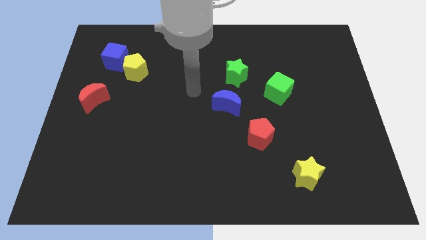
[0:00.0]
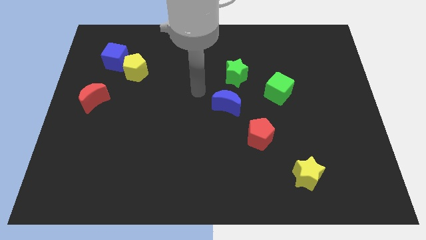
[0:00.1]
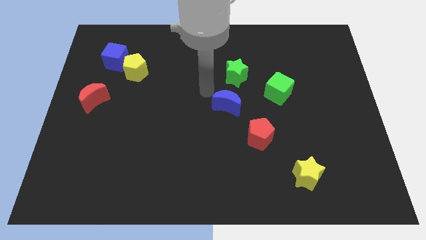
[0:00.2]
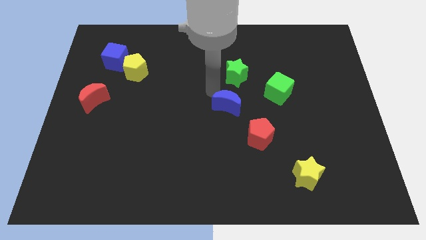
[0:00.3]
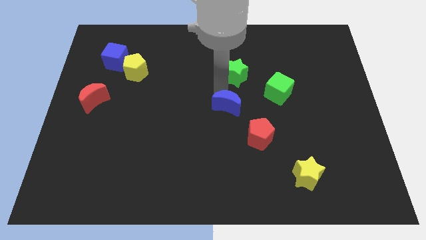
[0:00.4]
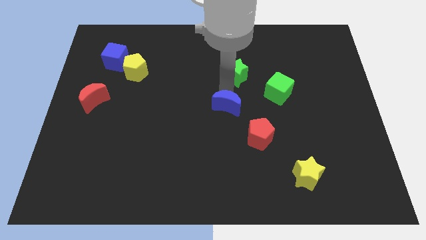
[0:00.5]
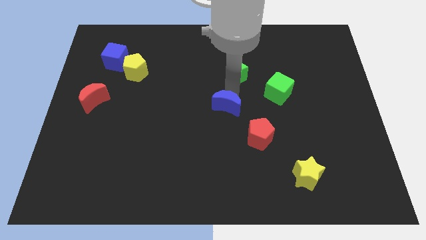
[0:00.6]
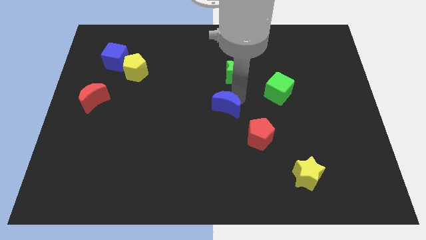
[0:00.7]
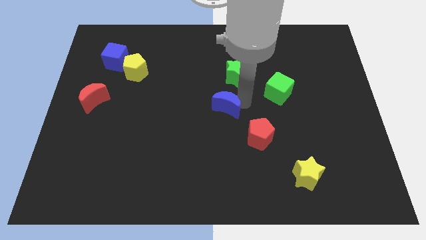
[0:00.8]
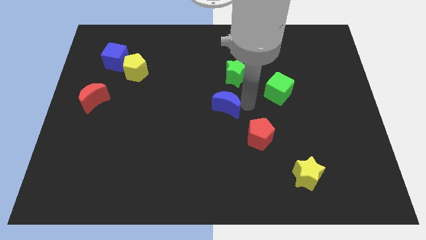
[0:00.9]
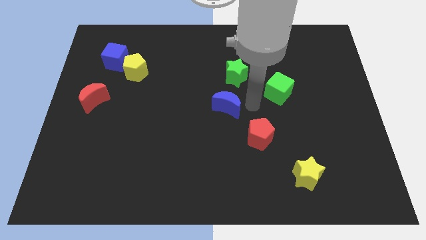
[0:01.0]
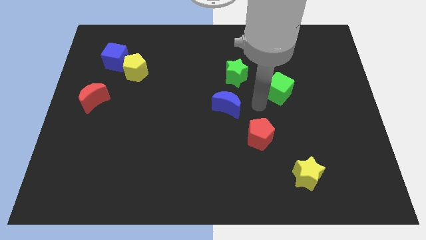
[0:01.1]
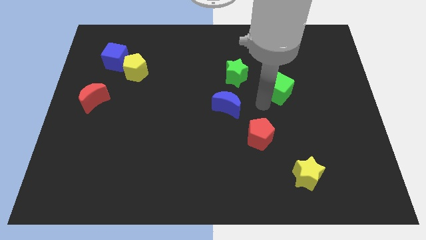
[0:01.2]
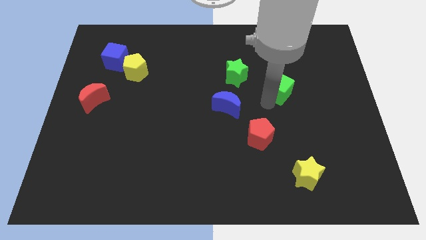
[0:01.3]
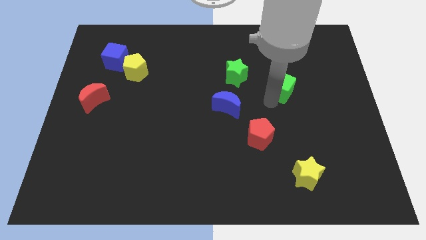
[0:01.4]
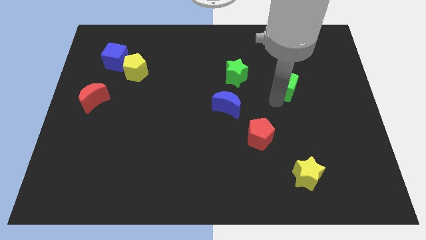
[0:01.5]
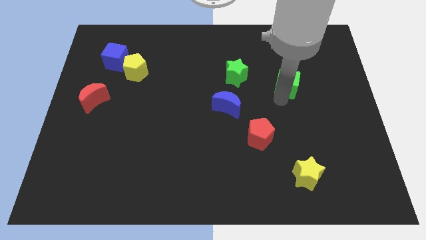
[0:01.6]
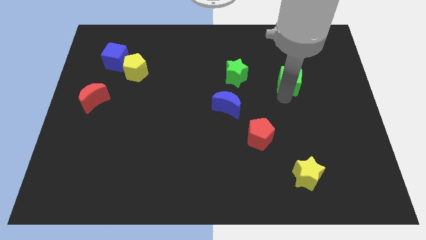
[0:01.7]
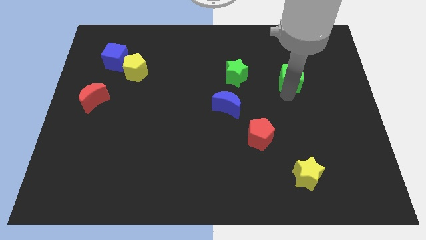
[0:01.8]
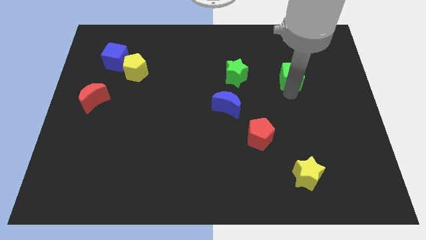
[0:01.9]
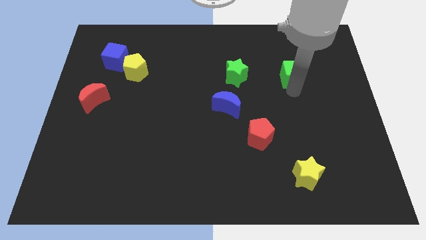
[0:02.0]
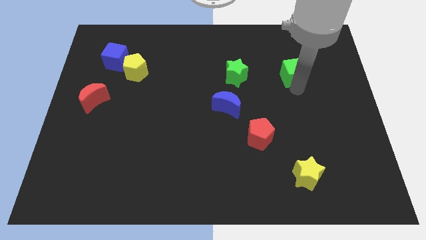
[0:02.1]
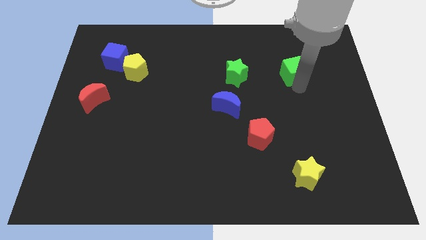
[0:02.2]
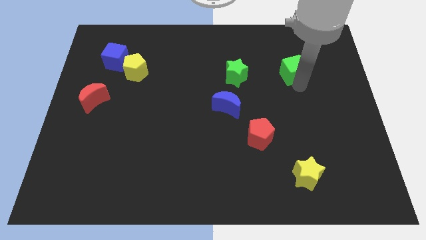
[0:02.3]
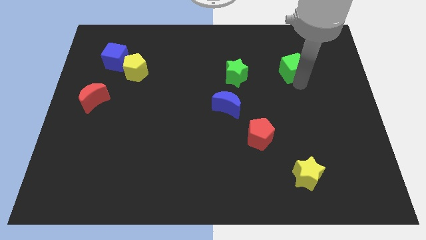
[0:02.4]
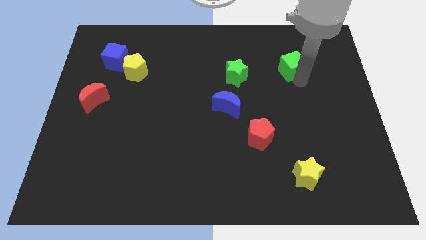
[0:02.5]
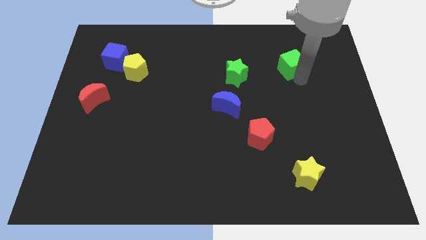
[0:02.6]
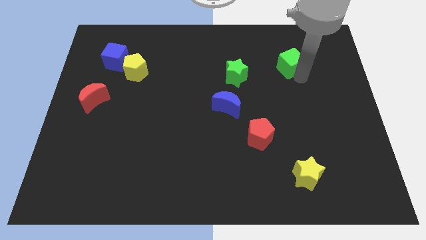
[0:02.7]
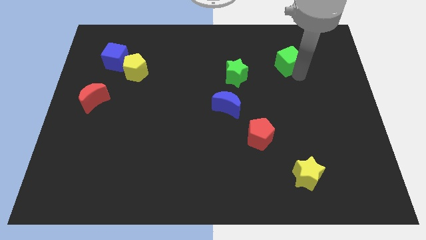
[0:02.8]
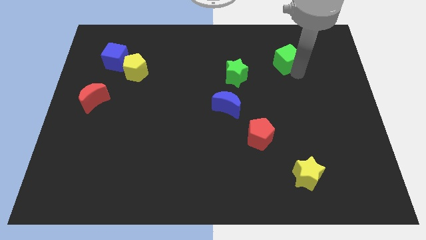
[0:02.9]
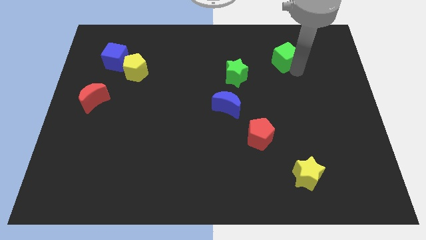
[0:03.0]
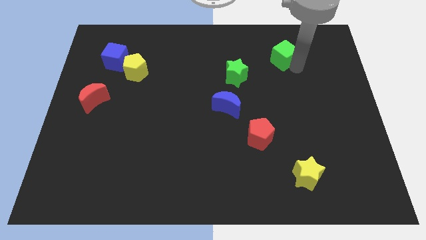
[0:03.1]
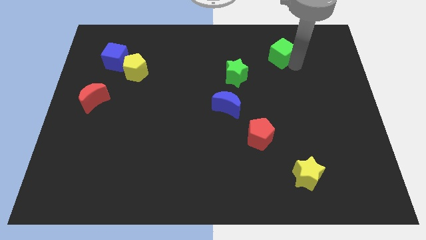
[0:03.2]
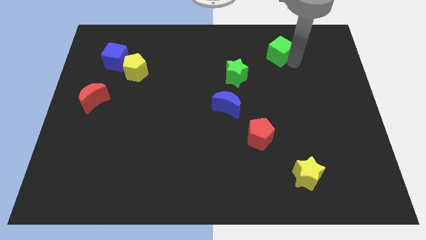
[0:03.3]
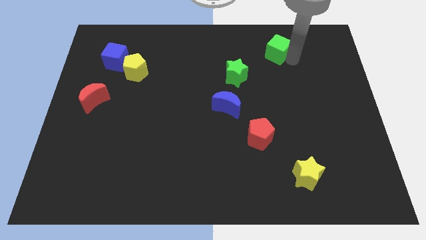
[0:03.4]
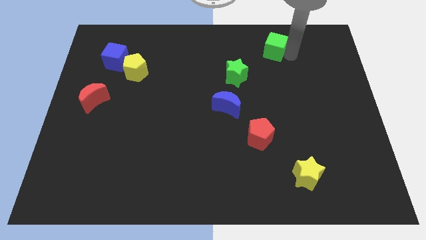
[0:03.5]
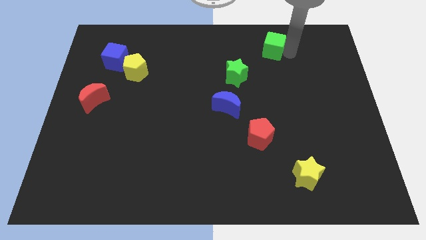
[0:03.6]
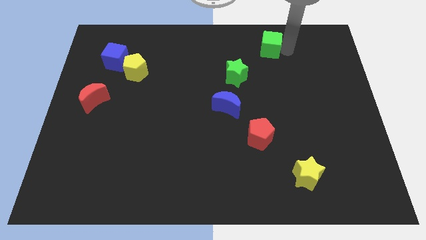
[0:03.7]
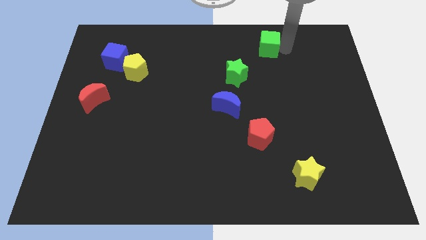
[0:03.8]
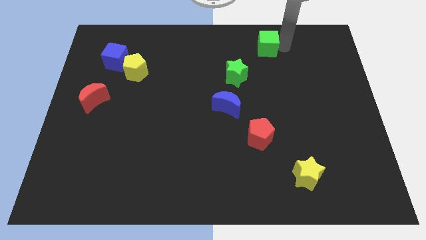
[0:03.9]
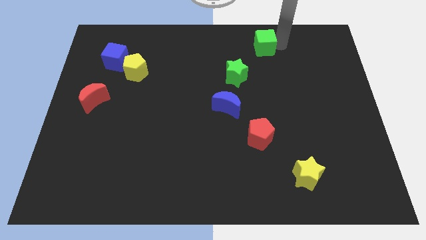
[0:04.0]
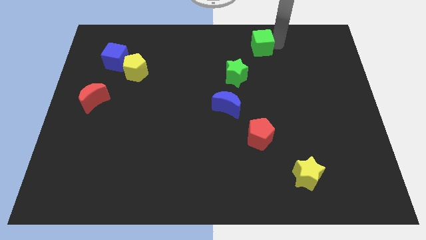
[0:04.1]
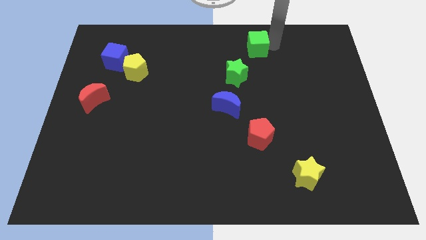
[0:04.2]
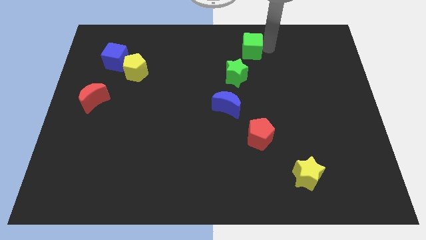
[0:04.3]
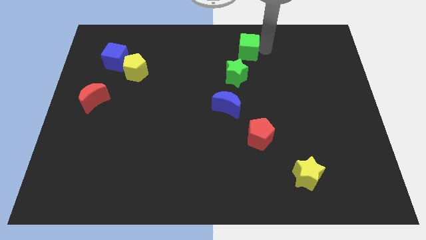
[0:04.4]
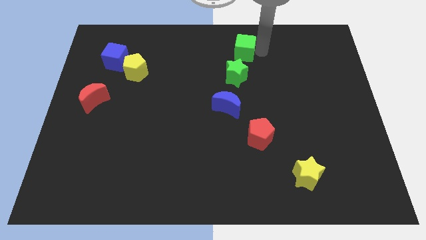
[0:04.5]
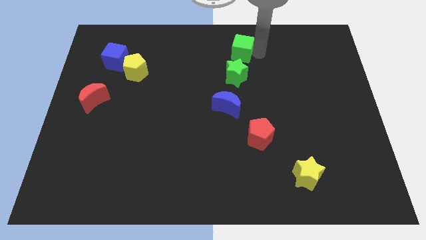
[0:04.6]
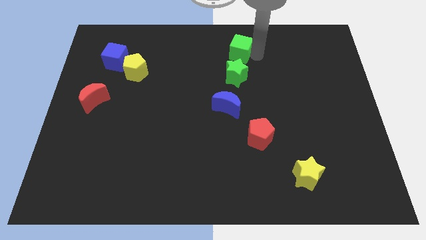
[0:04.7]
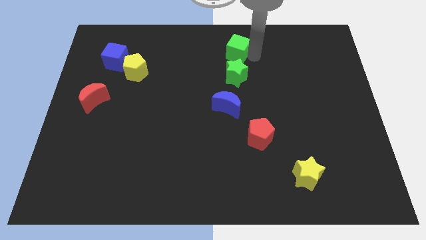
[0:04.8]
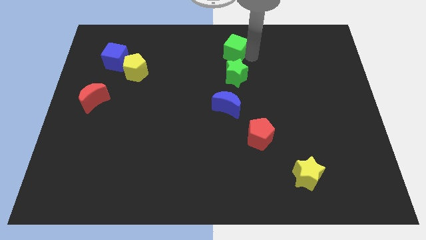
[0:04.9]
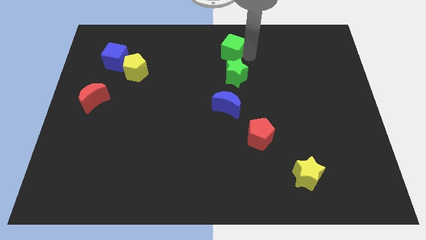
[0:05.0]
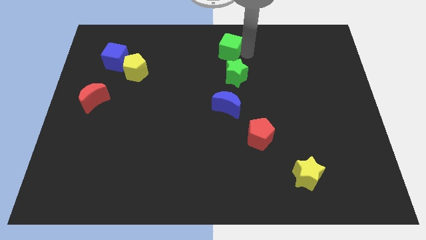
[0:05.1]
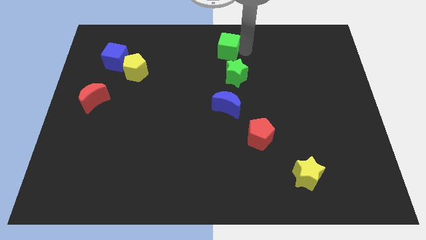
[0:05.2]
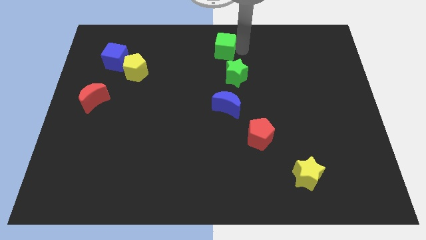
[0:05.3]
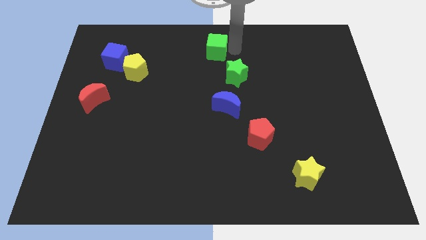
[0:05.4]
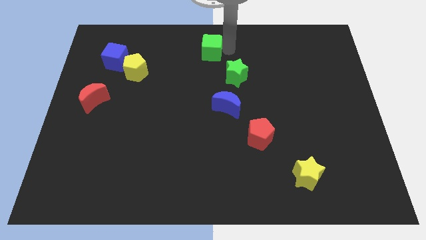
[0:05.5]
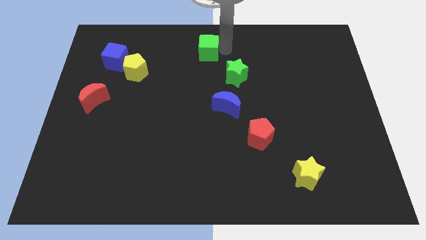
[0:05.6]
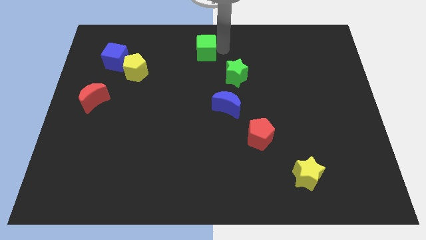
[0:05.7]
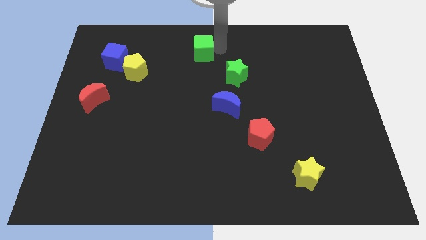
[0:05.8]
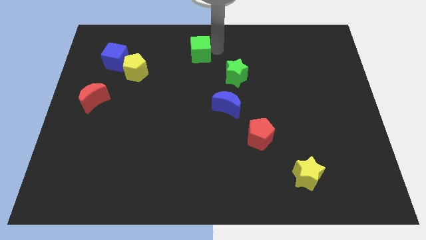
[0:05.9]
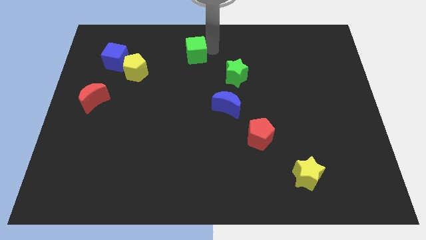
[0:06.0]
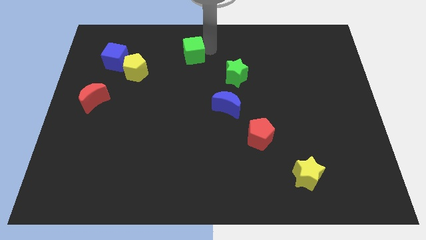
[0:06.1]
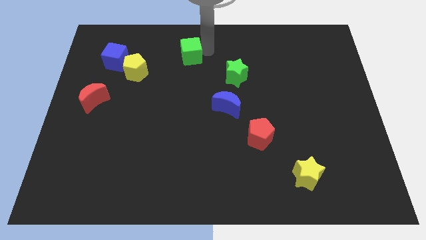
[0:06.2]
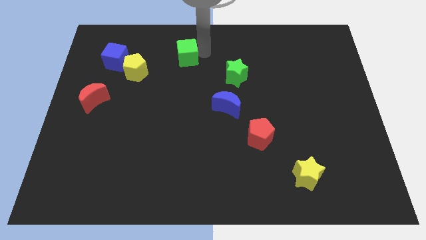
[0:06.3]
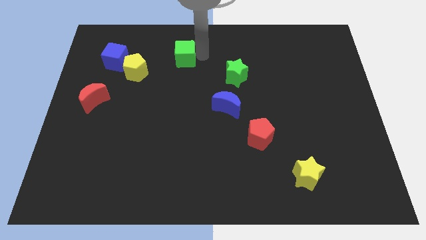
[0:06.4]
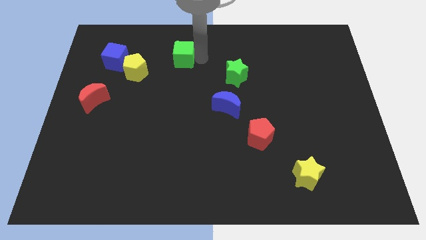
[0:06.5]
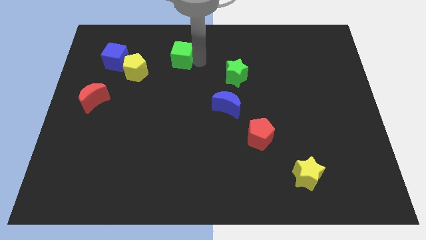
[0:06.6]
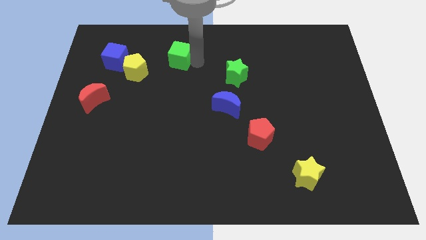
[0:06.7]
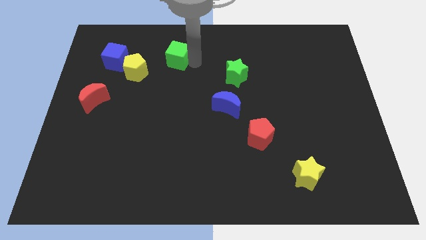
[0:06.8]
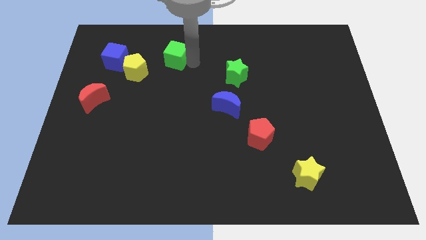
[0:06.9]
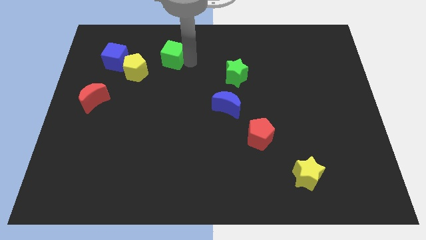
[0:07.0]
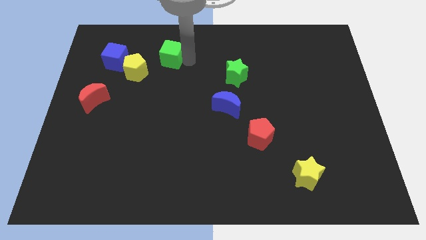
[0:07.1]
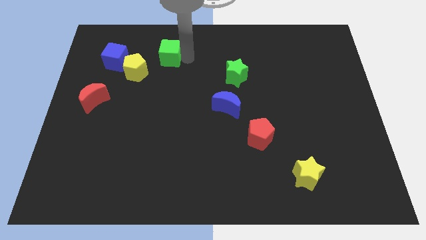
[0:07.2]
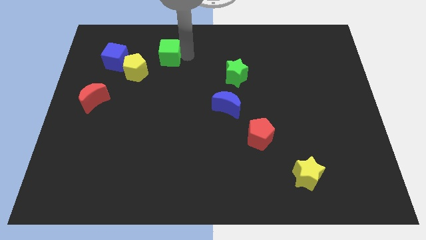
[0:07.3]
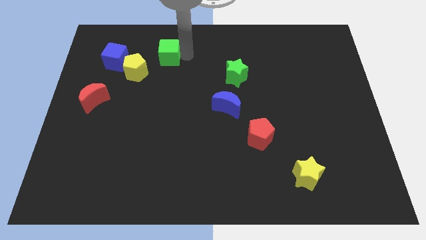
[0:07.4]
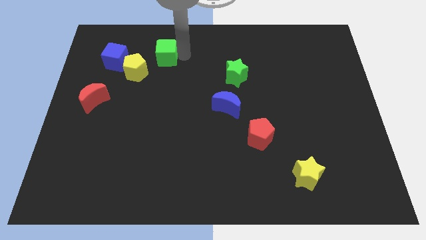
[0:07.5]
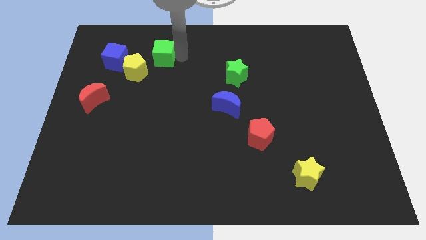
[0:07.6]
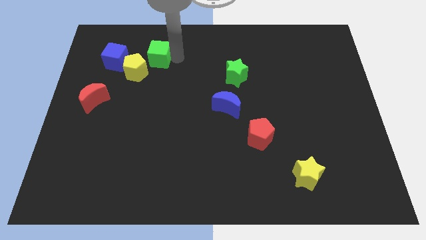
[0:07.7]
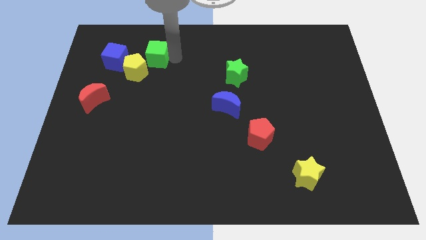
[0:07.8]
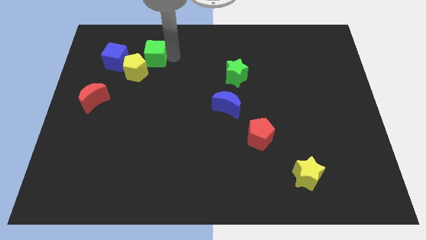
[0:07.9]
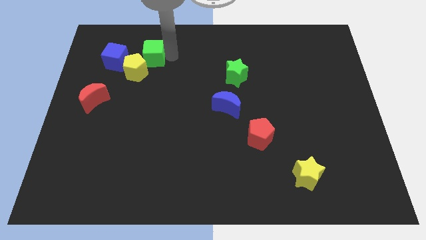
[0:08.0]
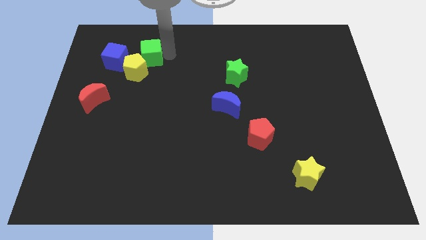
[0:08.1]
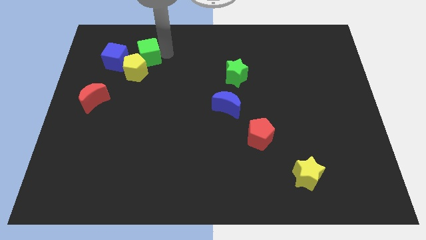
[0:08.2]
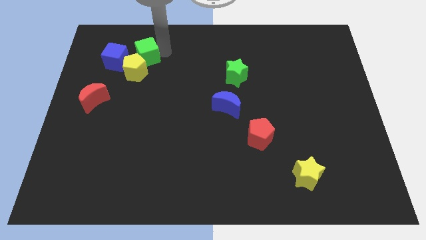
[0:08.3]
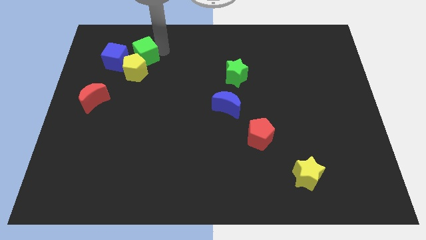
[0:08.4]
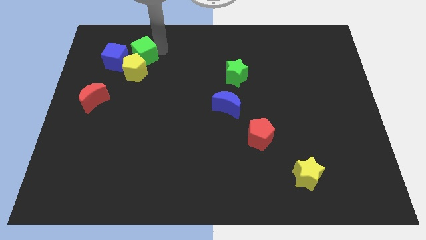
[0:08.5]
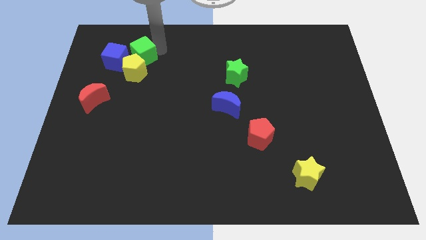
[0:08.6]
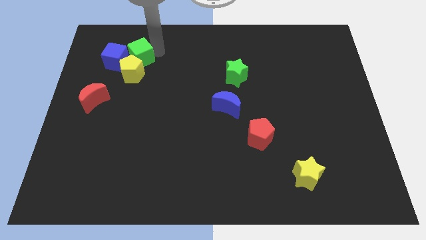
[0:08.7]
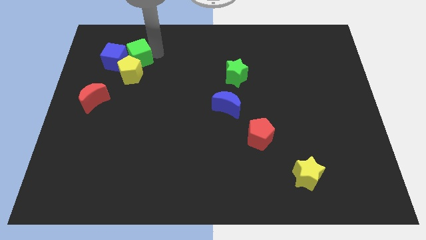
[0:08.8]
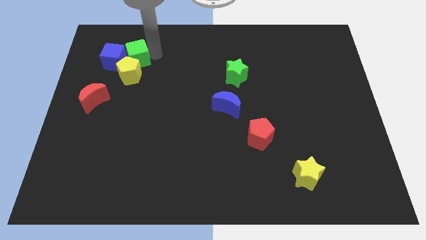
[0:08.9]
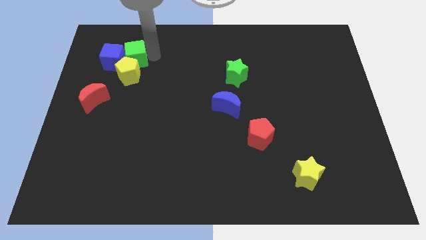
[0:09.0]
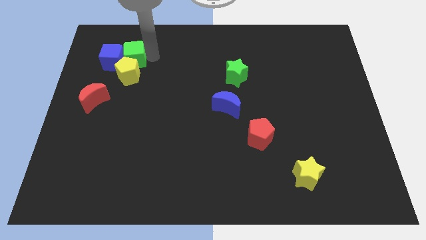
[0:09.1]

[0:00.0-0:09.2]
put the green cube to the blue cube
